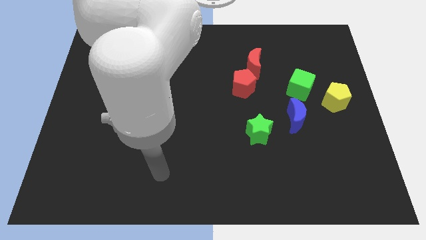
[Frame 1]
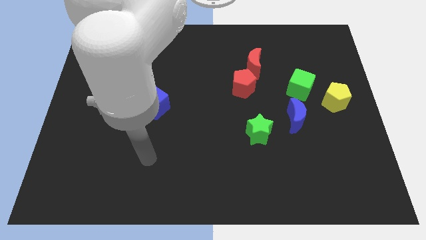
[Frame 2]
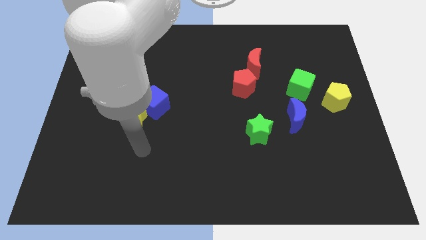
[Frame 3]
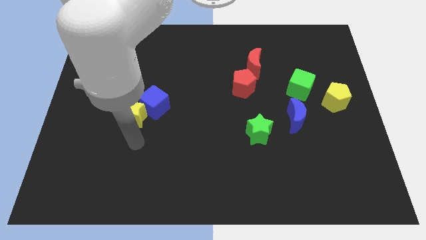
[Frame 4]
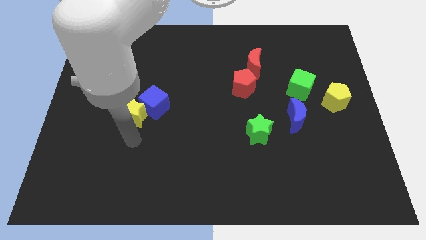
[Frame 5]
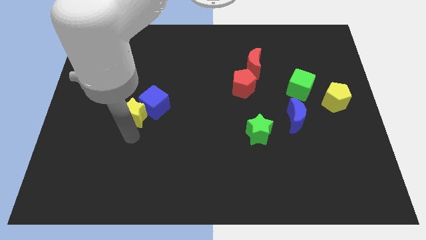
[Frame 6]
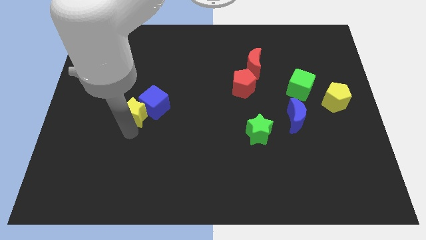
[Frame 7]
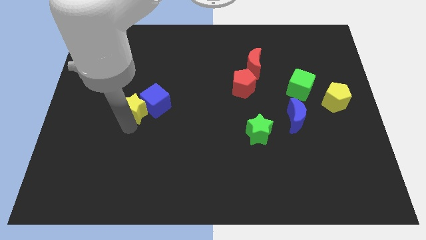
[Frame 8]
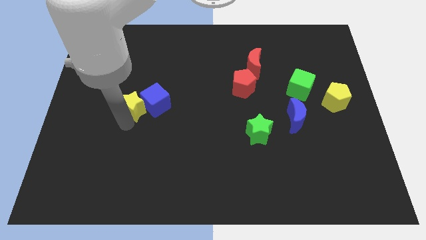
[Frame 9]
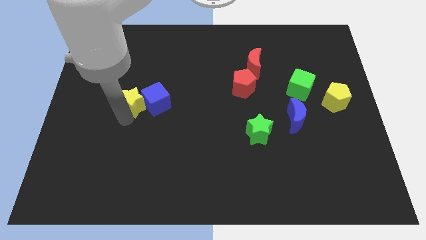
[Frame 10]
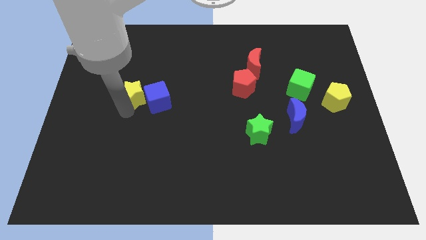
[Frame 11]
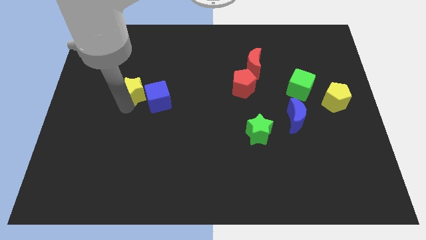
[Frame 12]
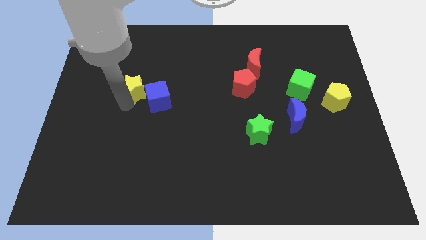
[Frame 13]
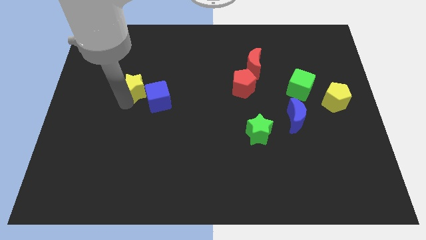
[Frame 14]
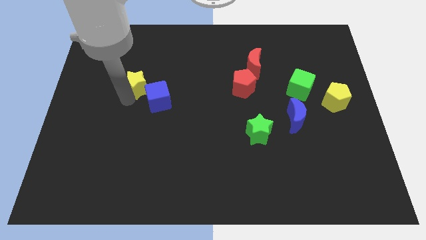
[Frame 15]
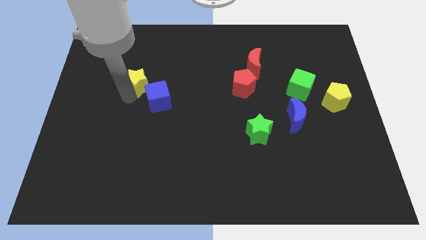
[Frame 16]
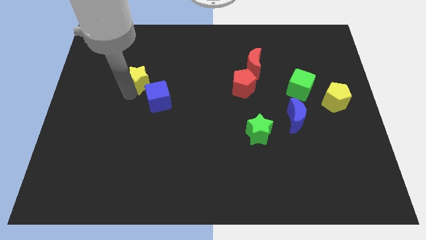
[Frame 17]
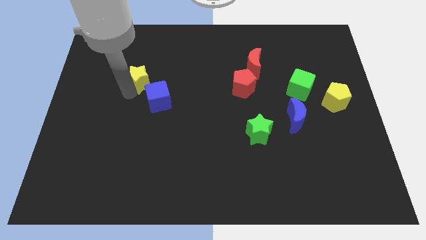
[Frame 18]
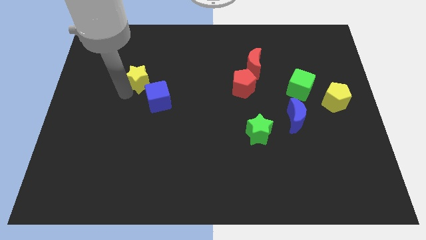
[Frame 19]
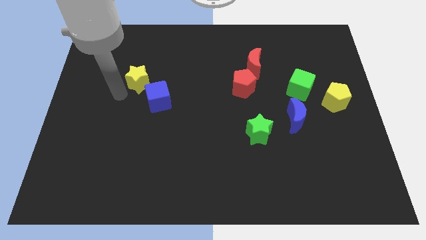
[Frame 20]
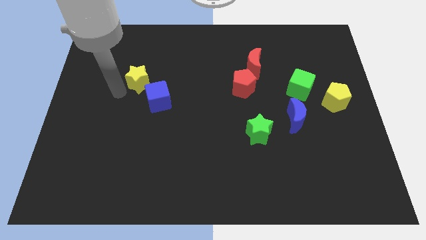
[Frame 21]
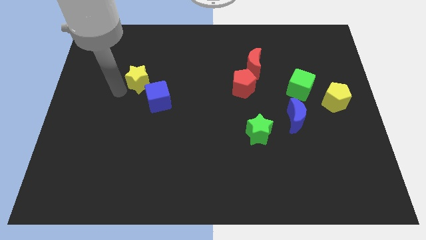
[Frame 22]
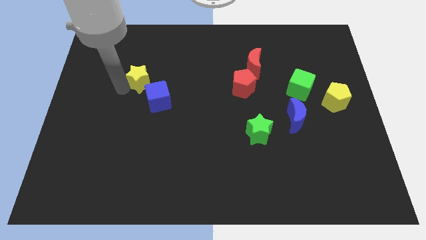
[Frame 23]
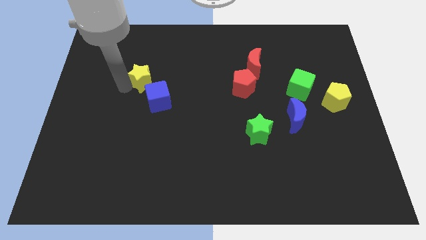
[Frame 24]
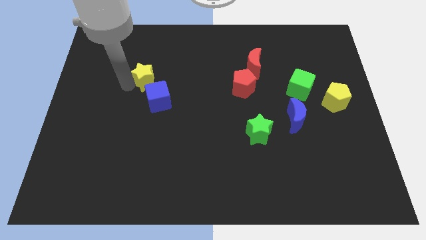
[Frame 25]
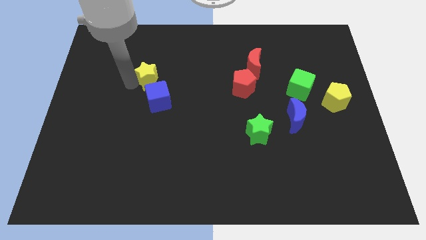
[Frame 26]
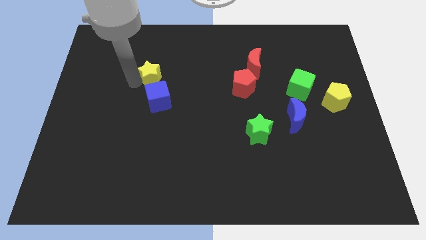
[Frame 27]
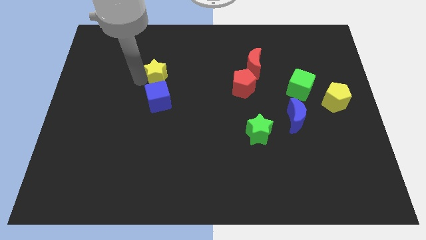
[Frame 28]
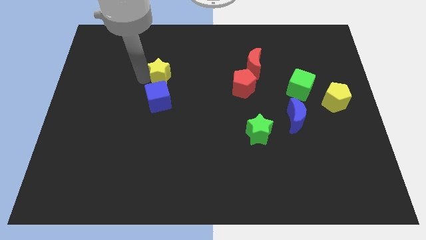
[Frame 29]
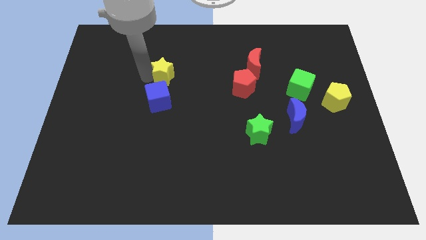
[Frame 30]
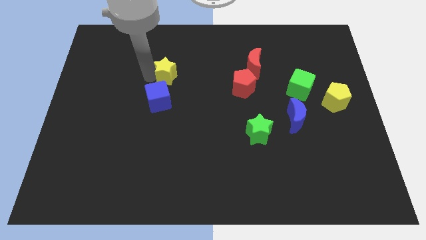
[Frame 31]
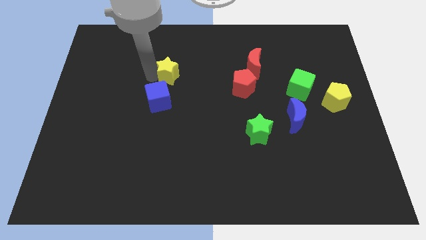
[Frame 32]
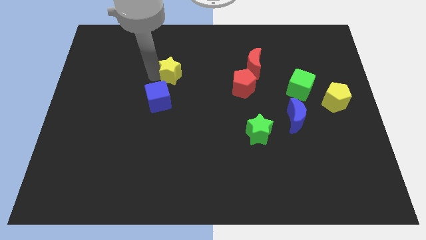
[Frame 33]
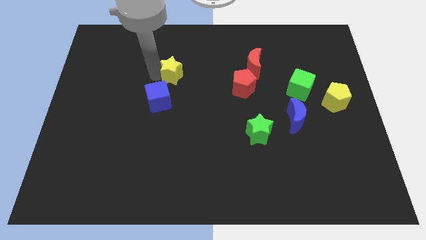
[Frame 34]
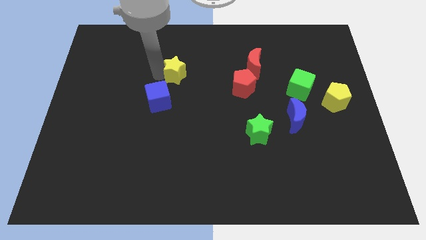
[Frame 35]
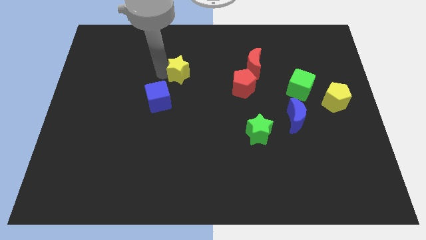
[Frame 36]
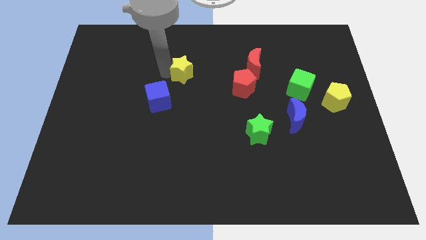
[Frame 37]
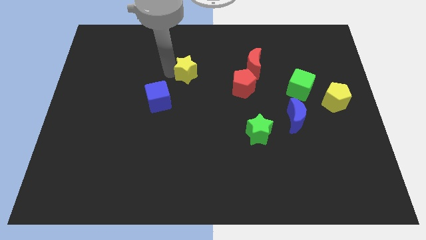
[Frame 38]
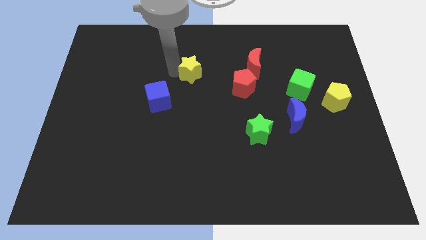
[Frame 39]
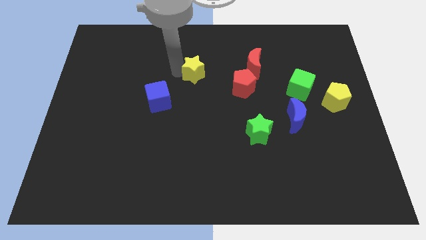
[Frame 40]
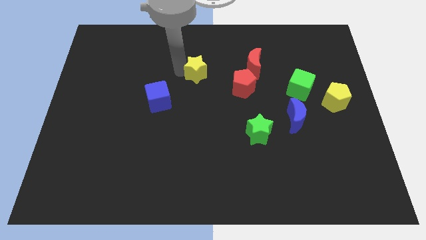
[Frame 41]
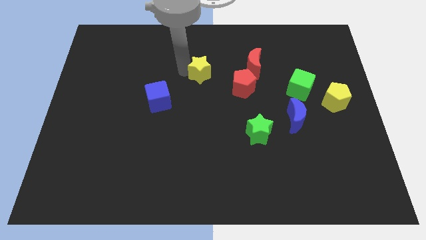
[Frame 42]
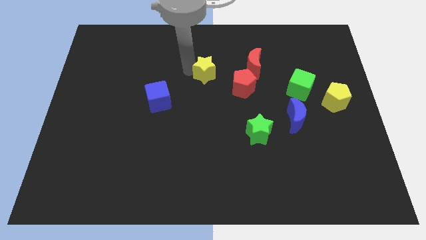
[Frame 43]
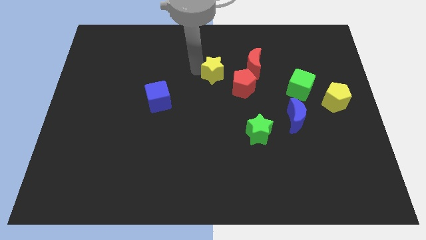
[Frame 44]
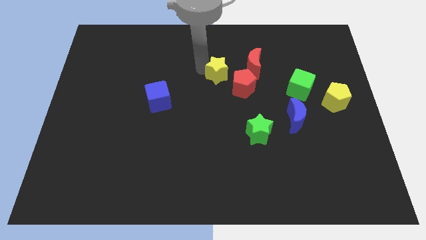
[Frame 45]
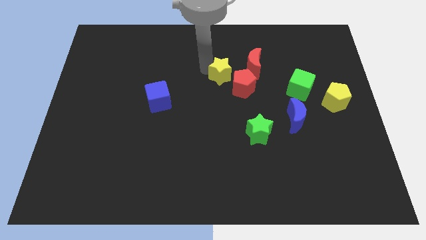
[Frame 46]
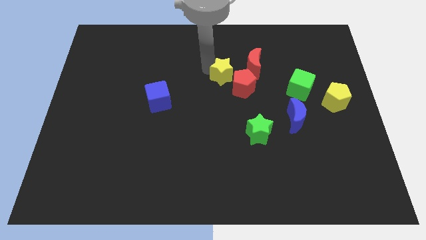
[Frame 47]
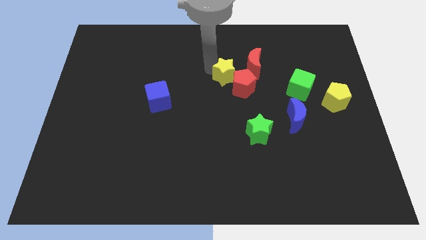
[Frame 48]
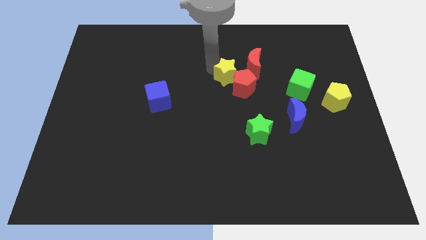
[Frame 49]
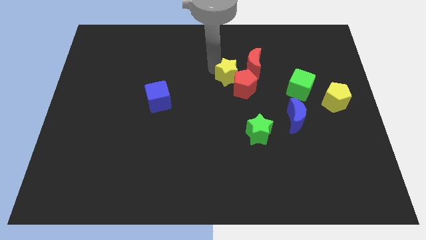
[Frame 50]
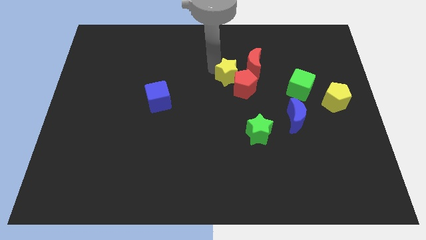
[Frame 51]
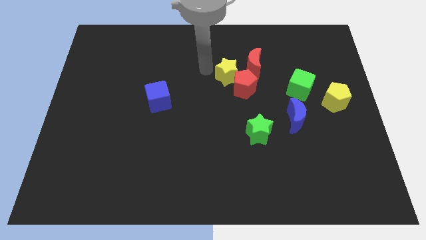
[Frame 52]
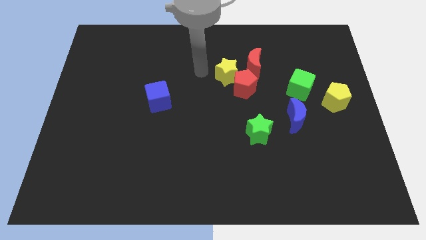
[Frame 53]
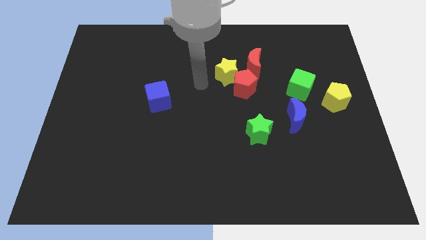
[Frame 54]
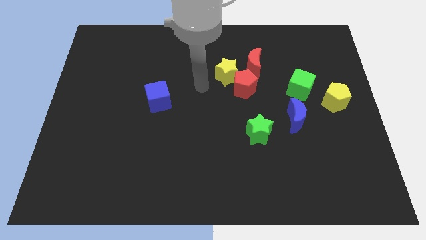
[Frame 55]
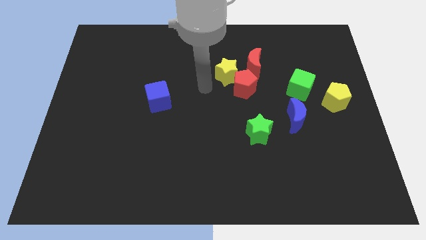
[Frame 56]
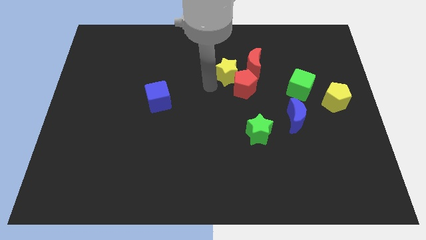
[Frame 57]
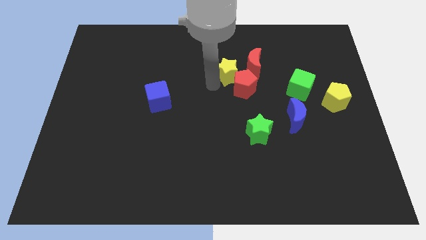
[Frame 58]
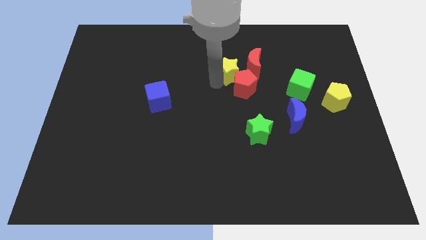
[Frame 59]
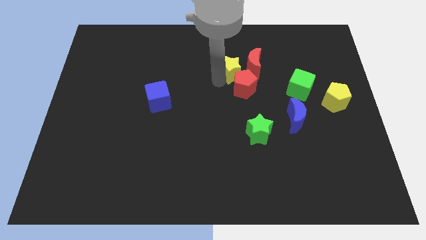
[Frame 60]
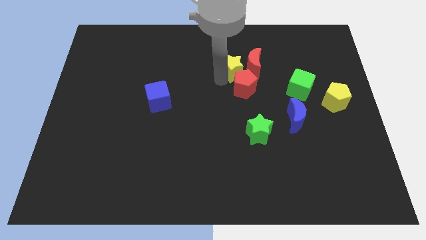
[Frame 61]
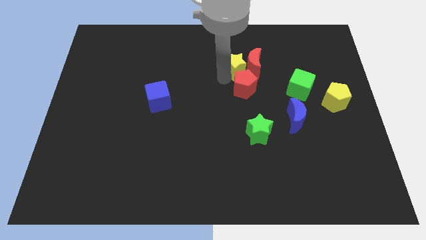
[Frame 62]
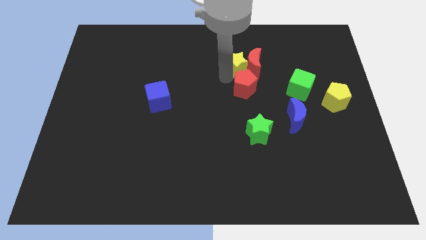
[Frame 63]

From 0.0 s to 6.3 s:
push the yellow star to the red moon
